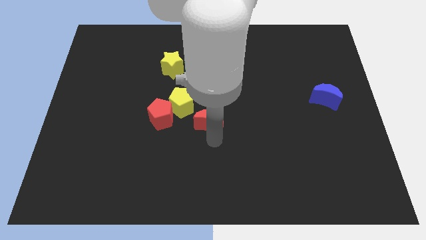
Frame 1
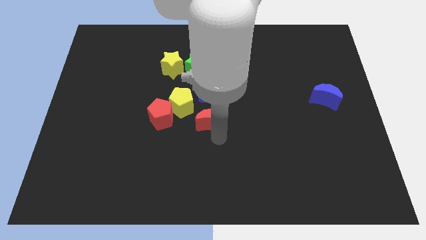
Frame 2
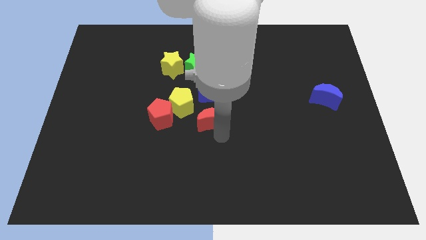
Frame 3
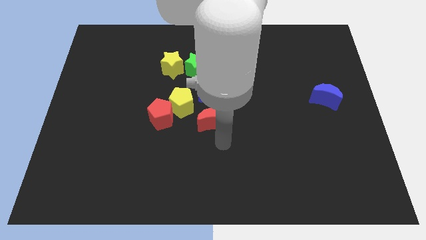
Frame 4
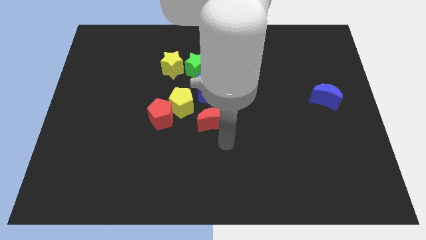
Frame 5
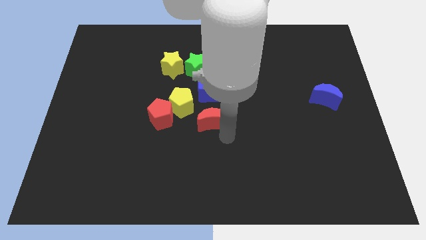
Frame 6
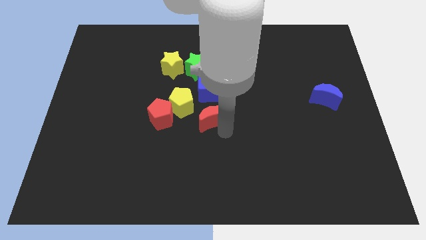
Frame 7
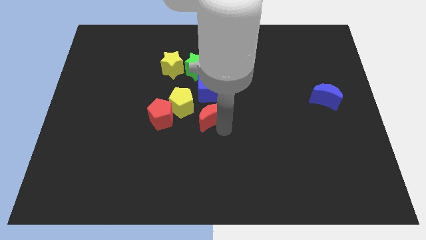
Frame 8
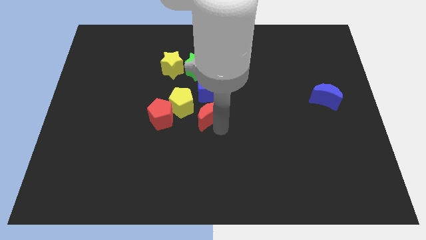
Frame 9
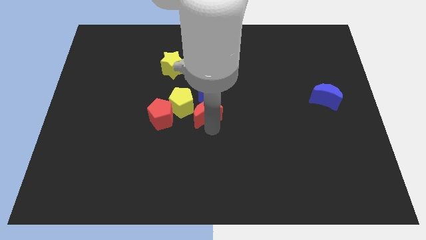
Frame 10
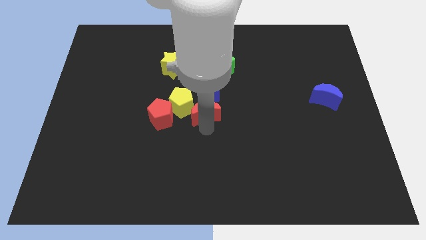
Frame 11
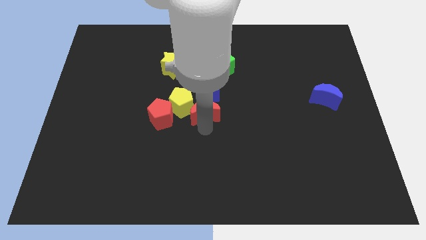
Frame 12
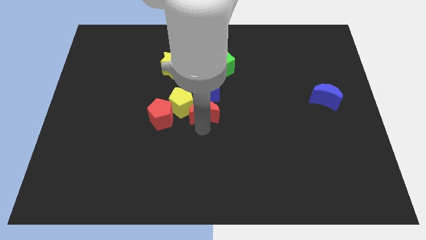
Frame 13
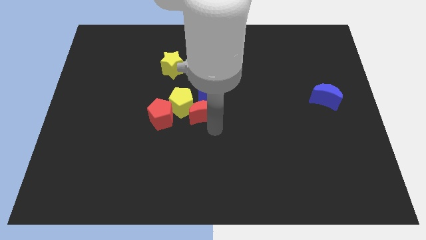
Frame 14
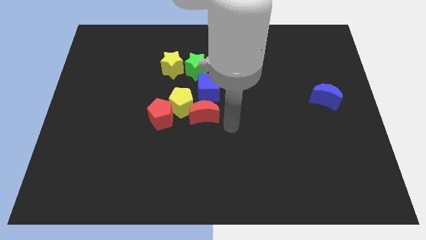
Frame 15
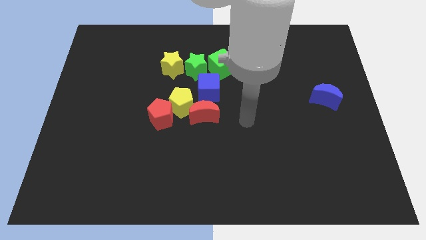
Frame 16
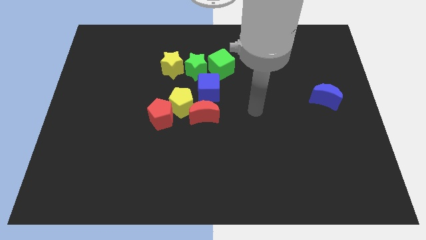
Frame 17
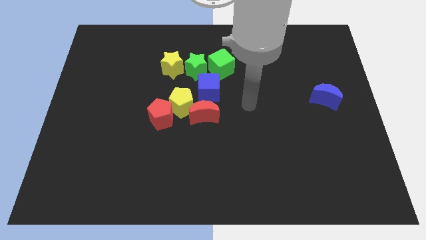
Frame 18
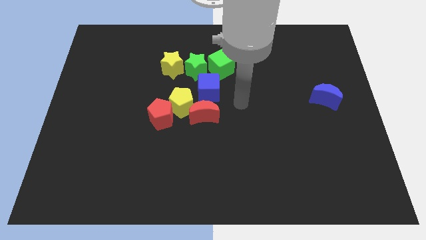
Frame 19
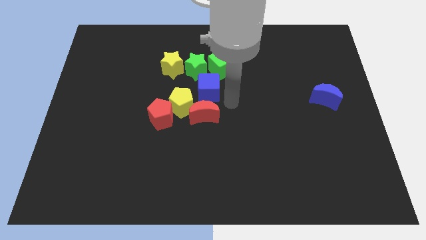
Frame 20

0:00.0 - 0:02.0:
place the red crescent vertically below the blue cube

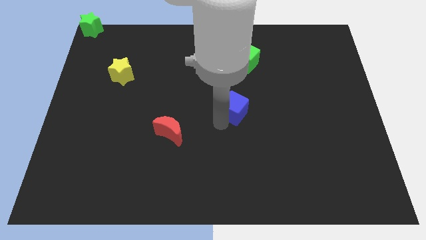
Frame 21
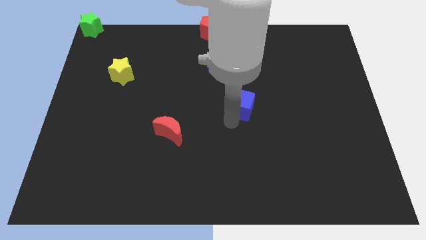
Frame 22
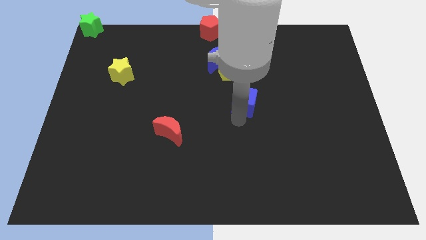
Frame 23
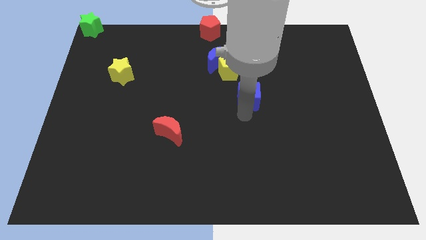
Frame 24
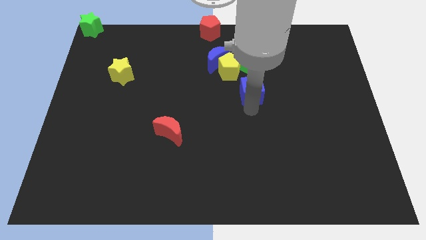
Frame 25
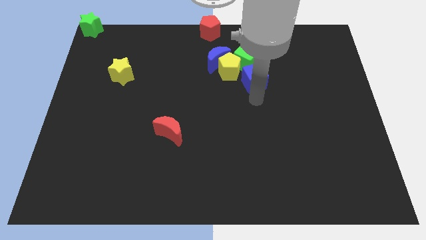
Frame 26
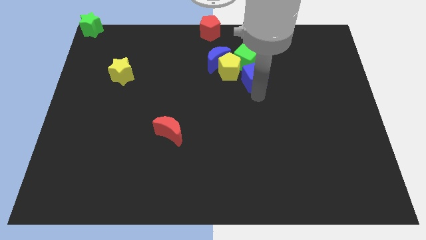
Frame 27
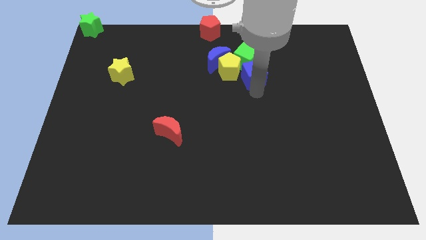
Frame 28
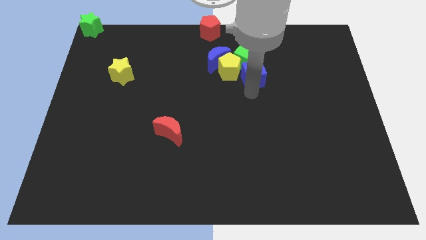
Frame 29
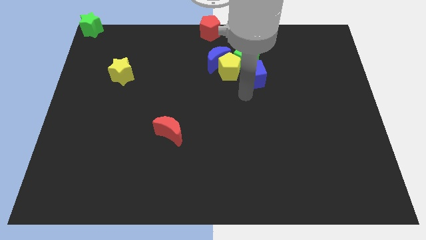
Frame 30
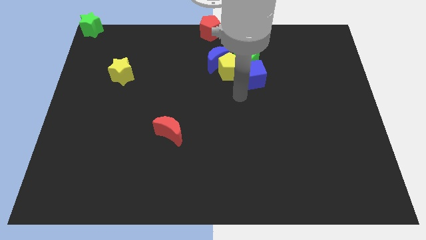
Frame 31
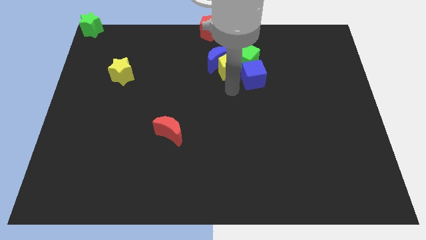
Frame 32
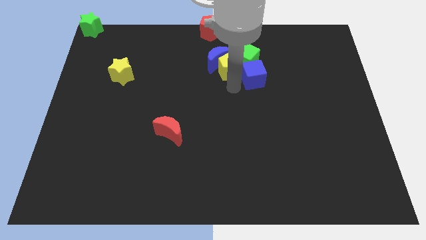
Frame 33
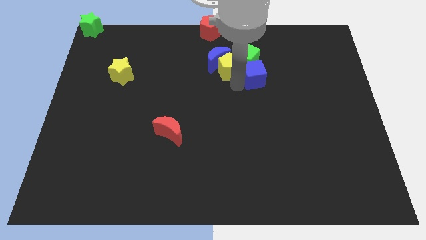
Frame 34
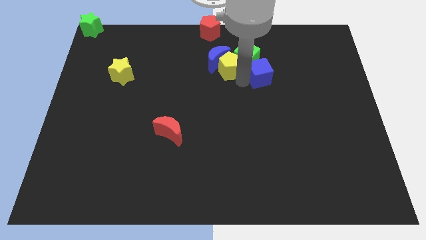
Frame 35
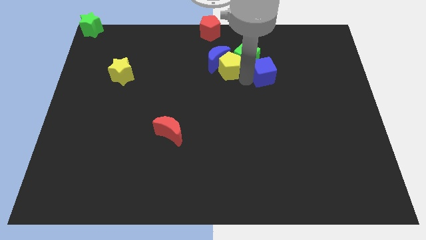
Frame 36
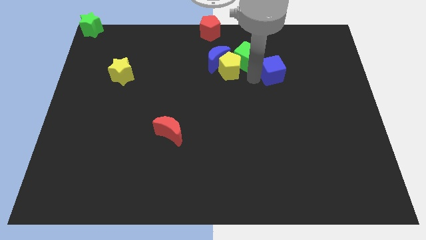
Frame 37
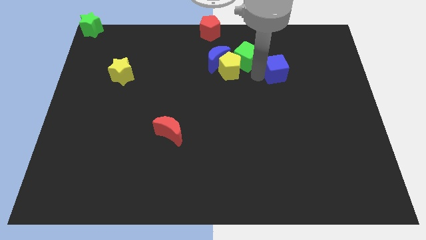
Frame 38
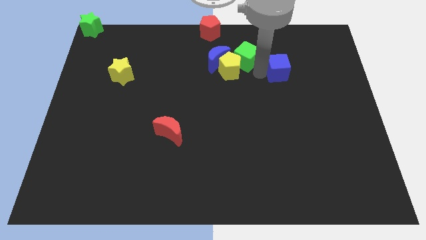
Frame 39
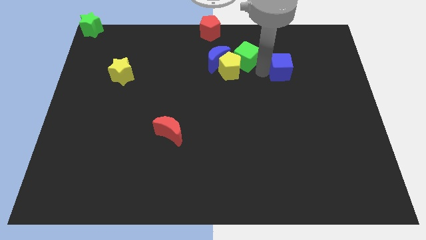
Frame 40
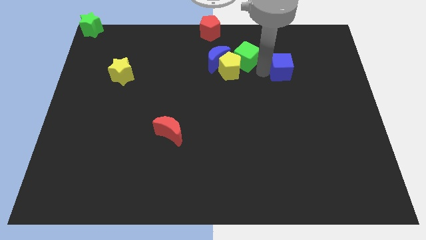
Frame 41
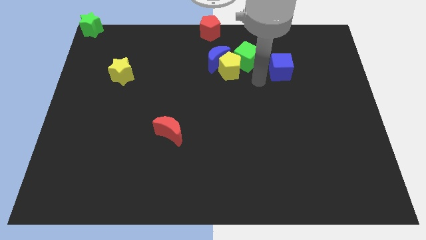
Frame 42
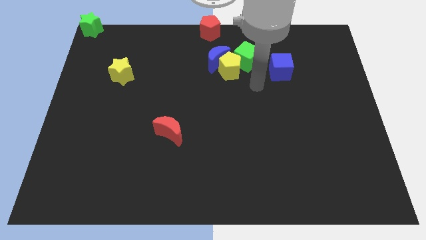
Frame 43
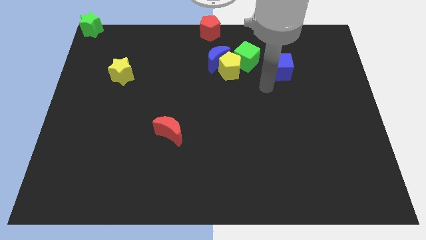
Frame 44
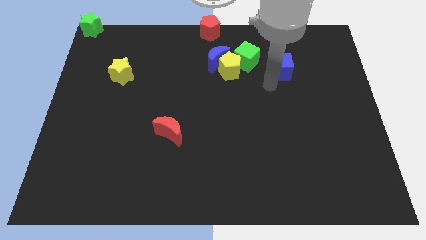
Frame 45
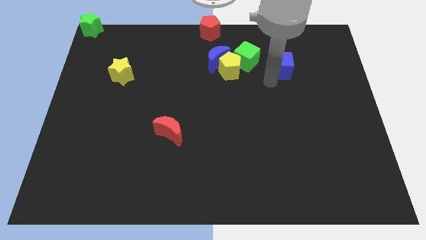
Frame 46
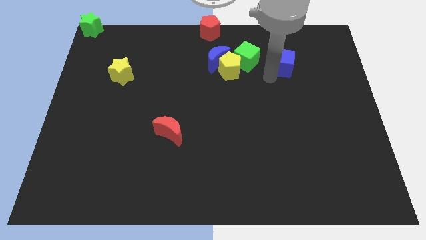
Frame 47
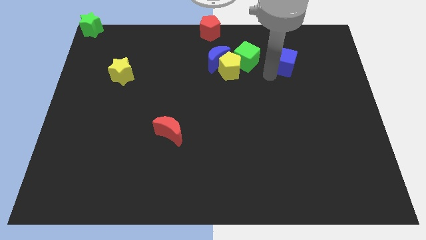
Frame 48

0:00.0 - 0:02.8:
push the blue cube to the right of the green cube

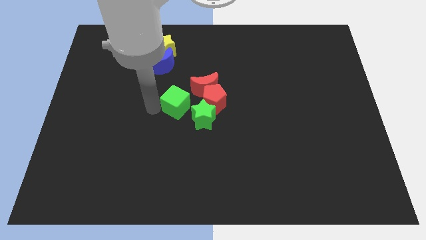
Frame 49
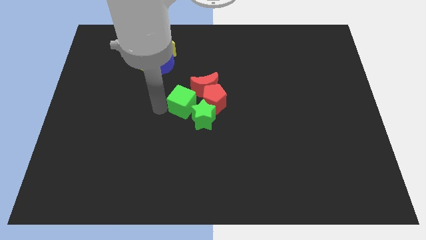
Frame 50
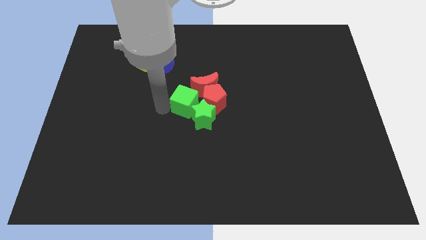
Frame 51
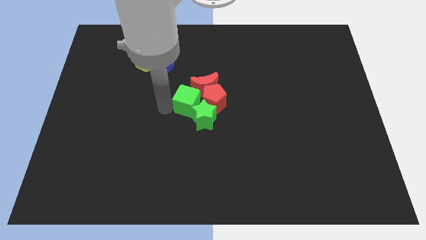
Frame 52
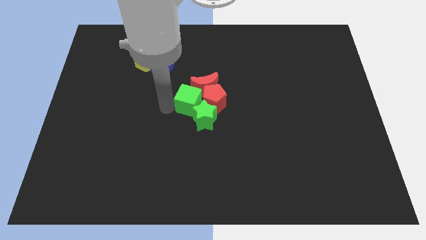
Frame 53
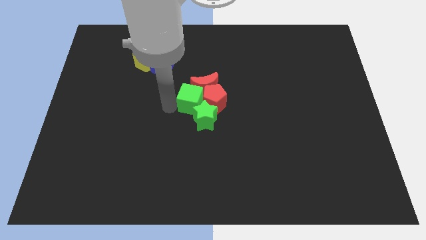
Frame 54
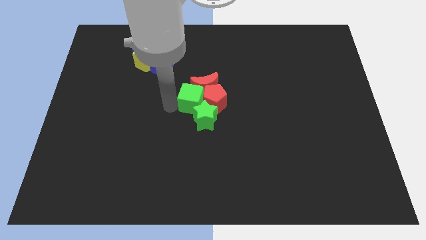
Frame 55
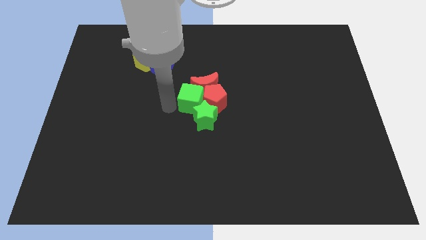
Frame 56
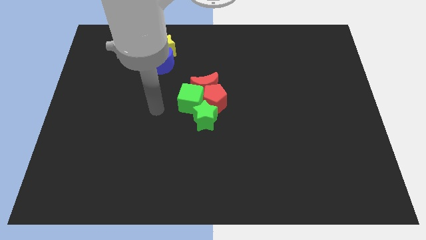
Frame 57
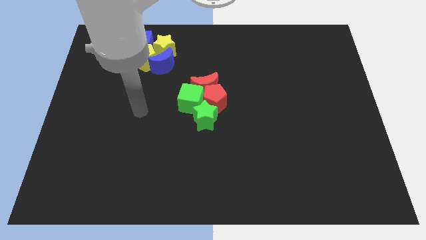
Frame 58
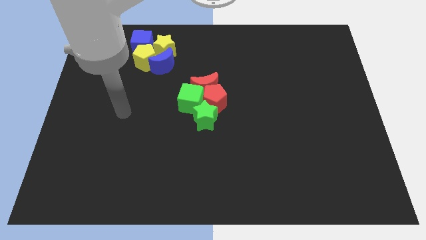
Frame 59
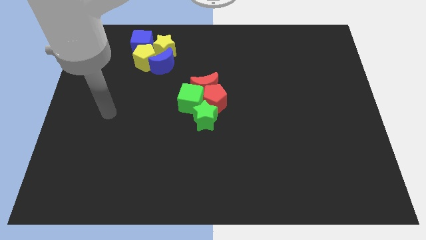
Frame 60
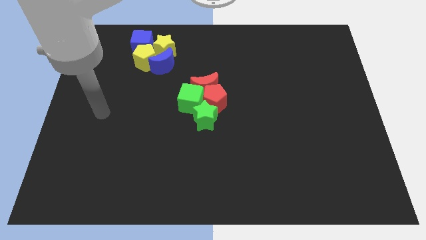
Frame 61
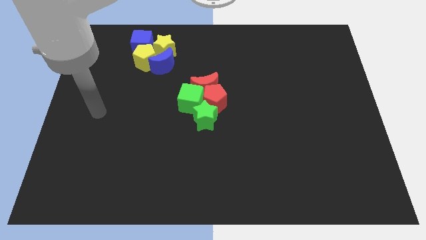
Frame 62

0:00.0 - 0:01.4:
move your arm away form the green cube

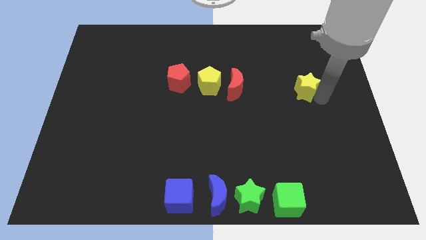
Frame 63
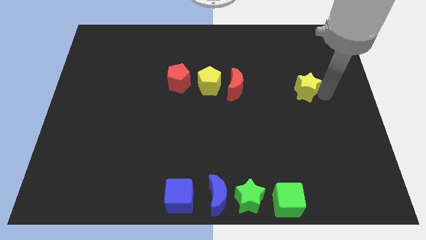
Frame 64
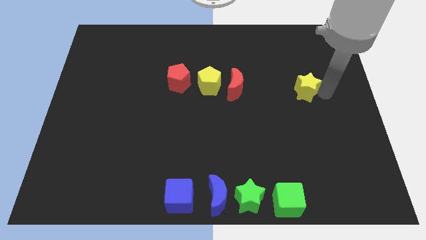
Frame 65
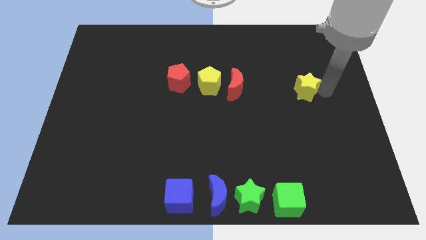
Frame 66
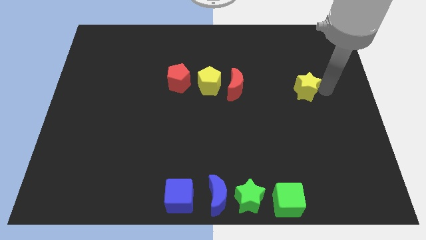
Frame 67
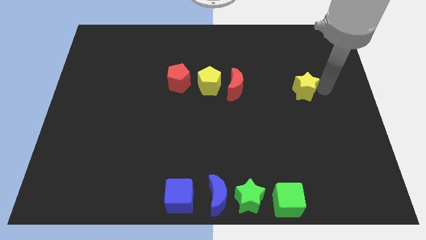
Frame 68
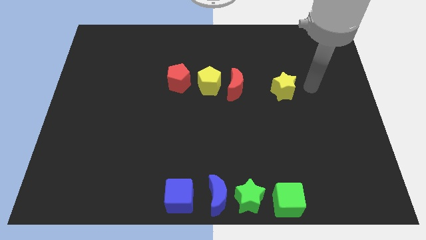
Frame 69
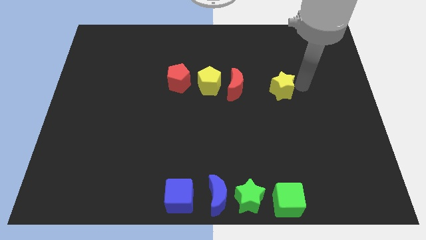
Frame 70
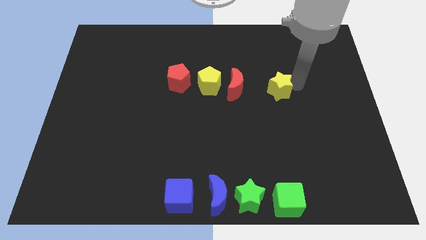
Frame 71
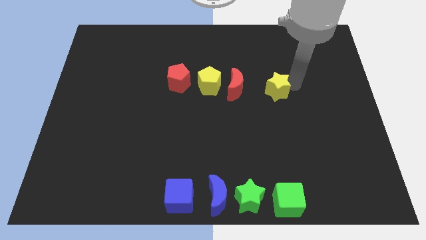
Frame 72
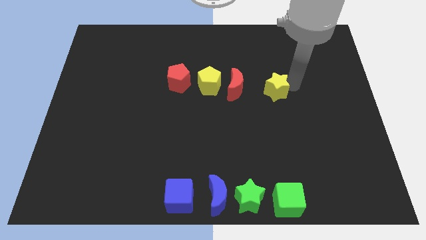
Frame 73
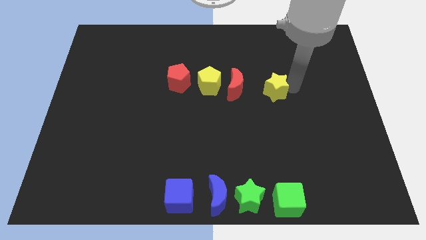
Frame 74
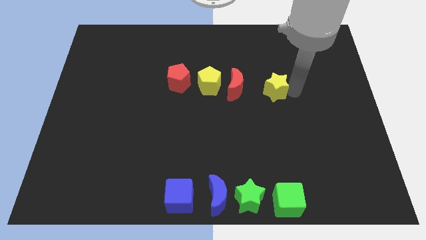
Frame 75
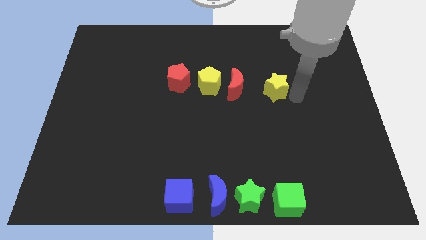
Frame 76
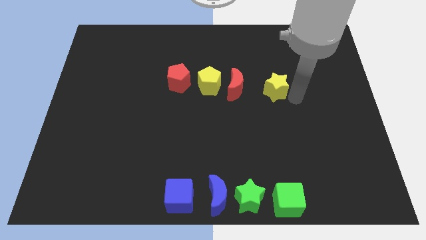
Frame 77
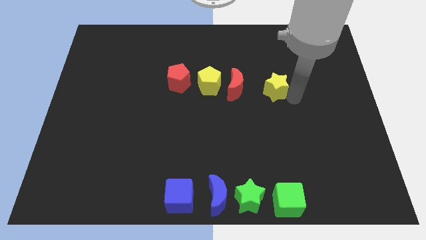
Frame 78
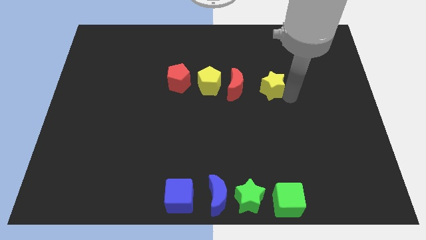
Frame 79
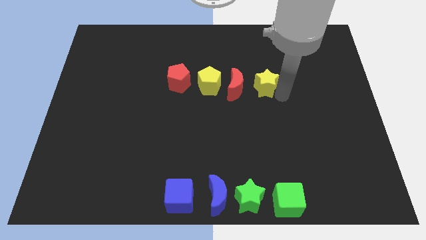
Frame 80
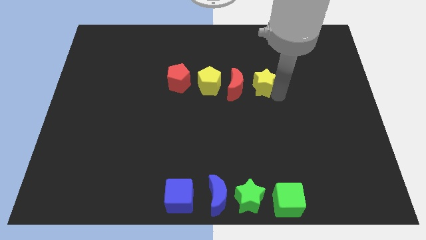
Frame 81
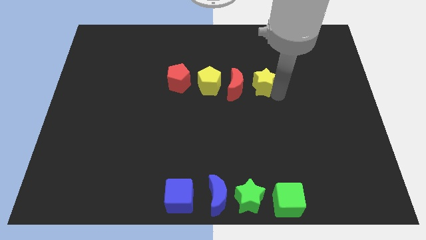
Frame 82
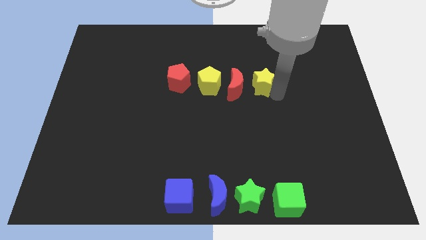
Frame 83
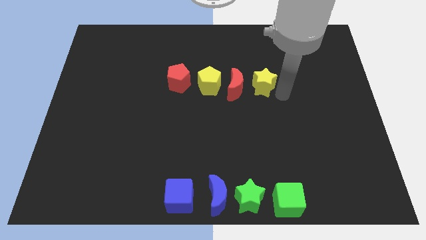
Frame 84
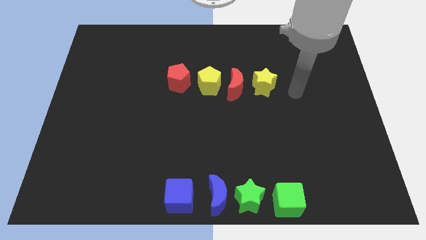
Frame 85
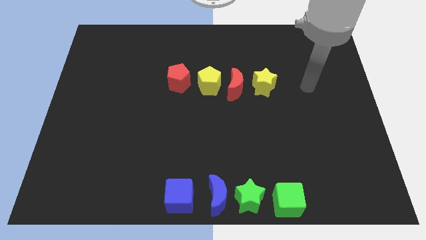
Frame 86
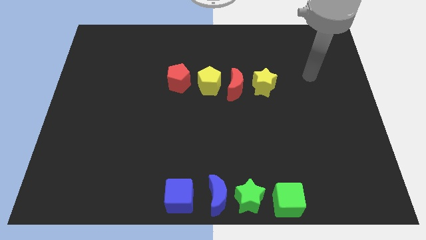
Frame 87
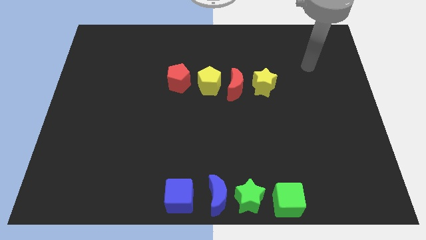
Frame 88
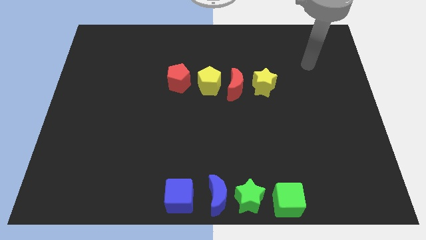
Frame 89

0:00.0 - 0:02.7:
place the yellow star to the right of the red moon

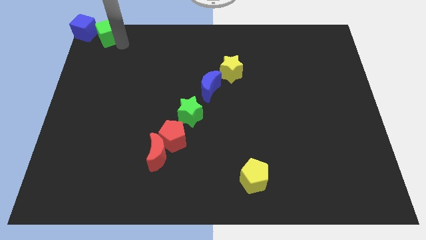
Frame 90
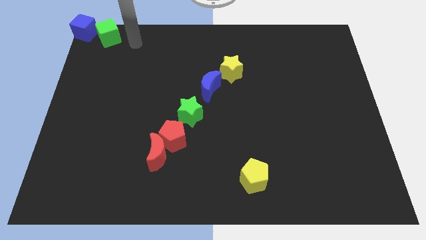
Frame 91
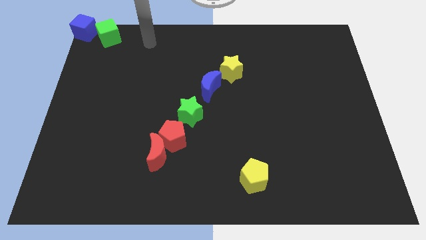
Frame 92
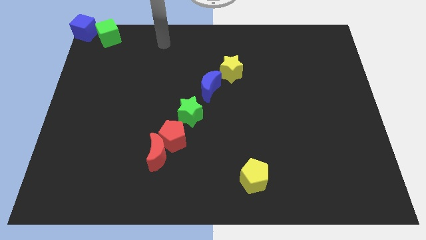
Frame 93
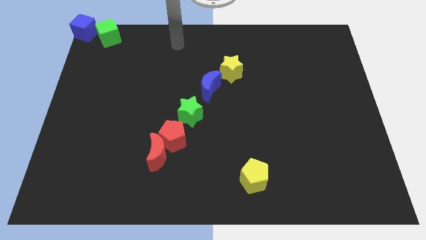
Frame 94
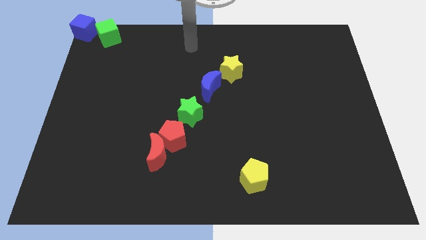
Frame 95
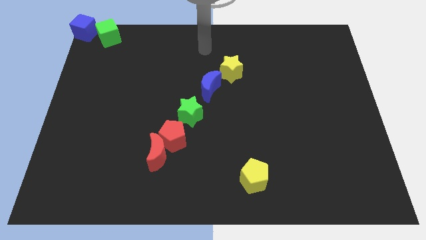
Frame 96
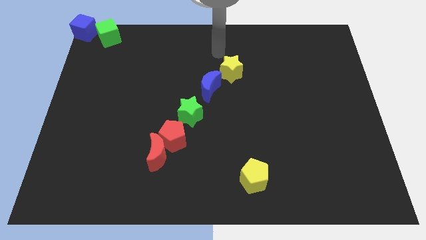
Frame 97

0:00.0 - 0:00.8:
move your arm away from green cube
